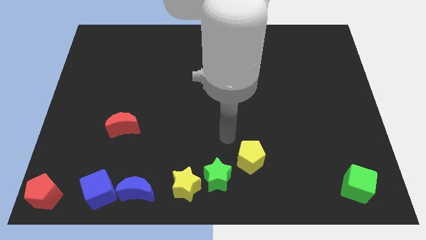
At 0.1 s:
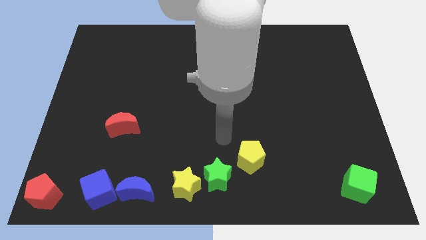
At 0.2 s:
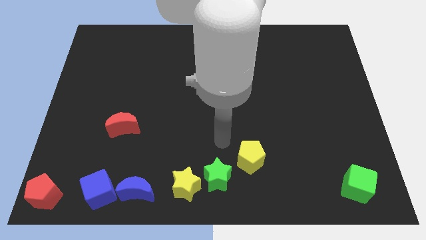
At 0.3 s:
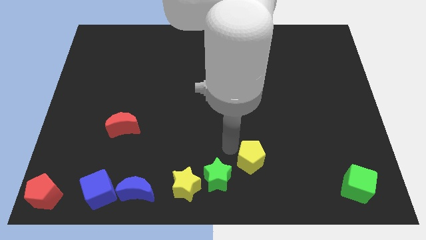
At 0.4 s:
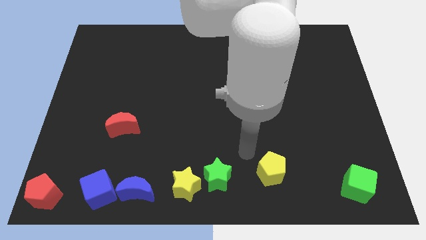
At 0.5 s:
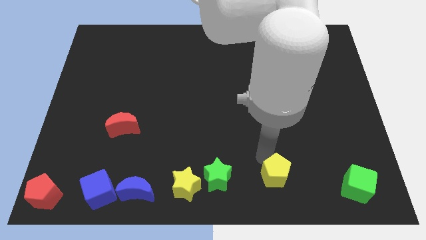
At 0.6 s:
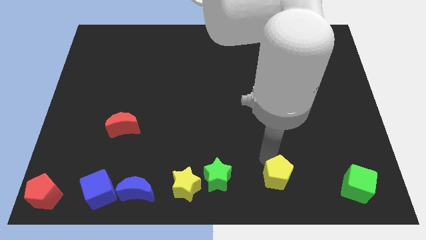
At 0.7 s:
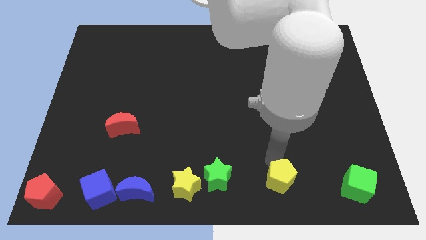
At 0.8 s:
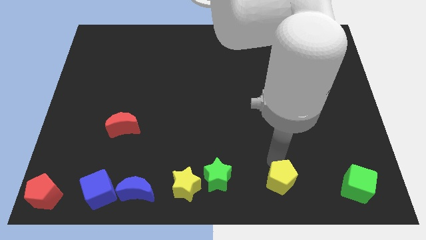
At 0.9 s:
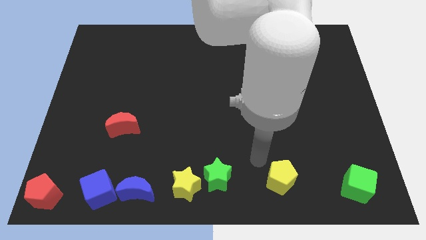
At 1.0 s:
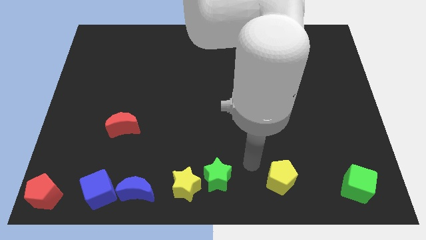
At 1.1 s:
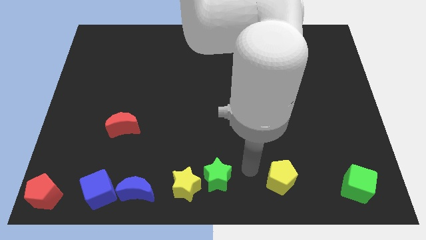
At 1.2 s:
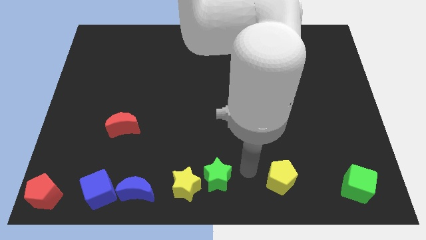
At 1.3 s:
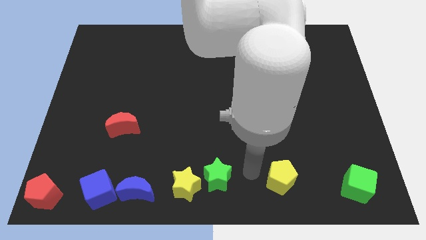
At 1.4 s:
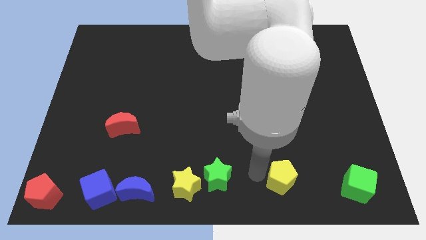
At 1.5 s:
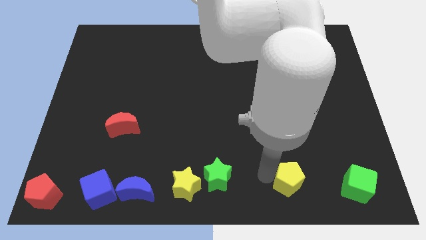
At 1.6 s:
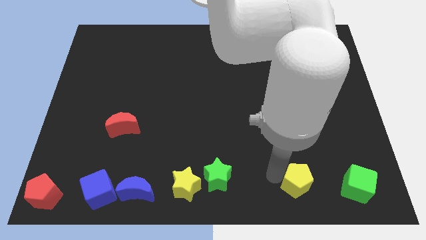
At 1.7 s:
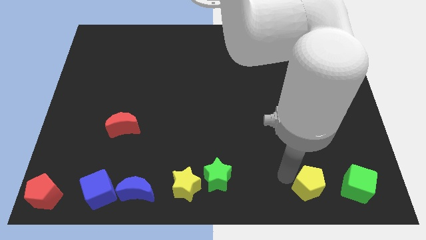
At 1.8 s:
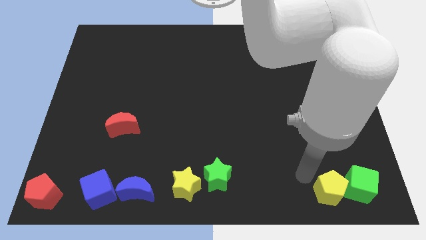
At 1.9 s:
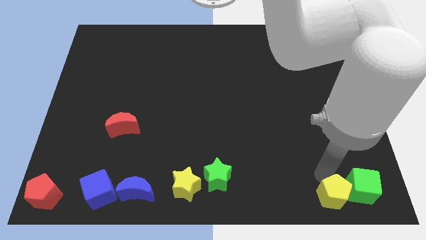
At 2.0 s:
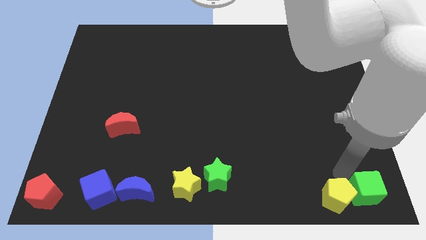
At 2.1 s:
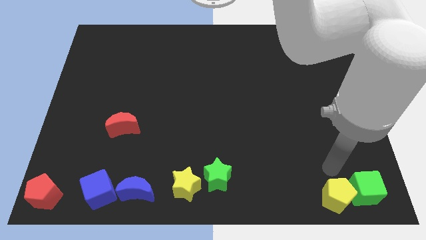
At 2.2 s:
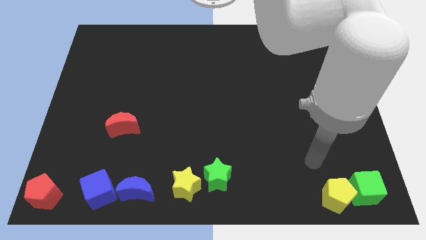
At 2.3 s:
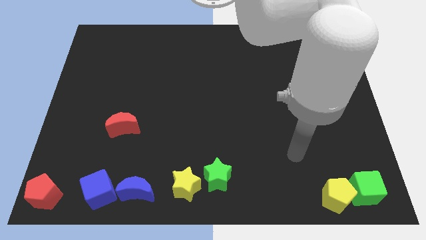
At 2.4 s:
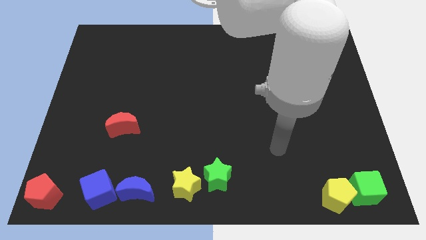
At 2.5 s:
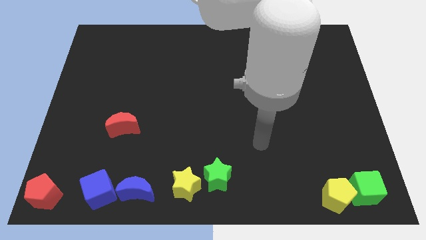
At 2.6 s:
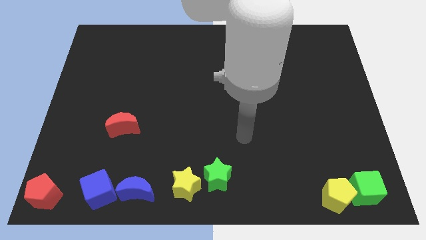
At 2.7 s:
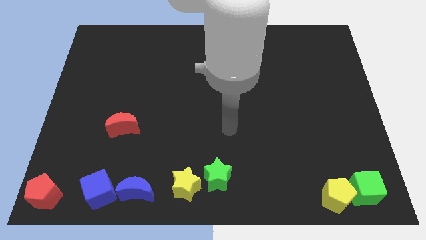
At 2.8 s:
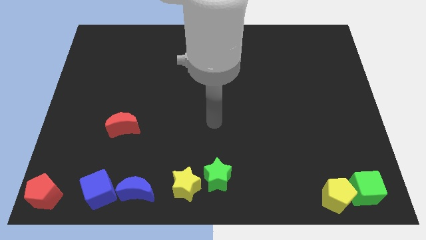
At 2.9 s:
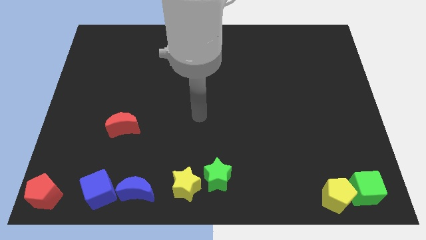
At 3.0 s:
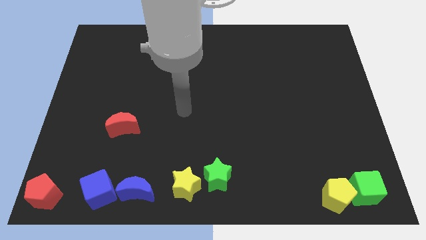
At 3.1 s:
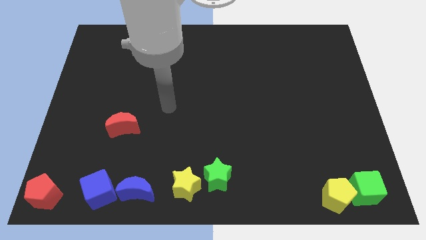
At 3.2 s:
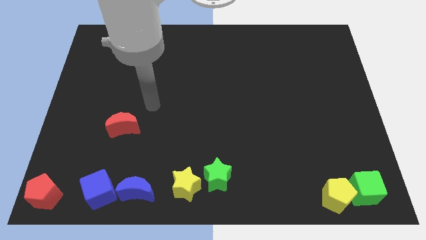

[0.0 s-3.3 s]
push the yellow pentagon into the green cube

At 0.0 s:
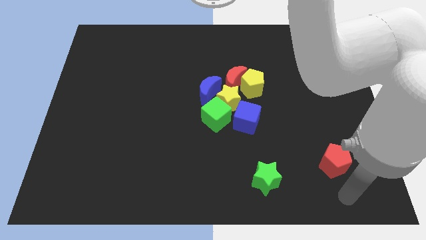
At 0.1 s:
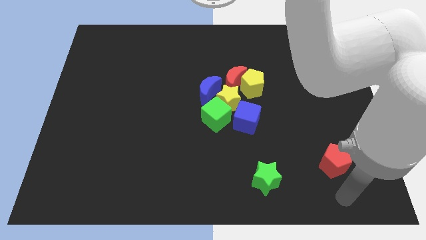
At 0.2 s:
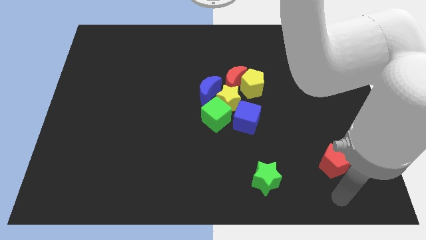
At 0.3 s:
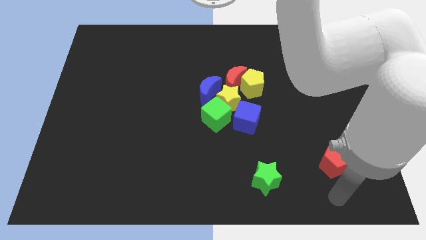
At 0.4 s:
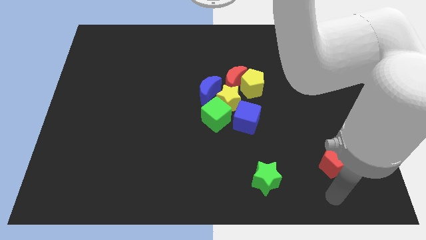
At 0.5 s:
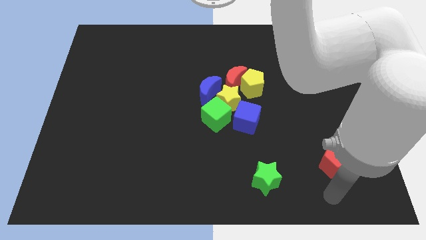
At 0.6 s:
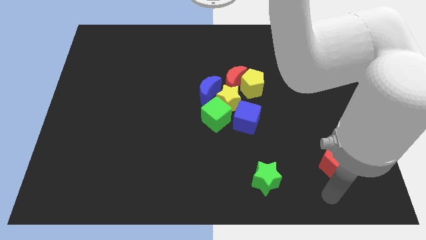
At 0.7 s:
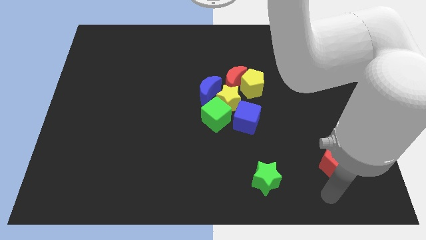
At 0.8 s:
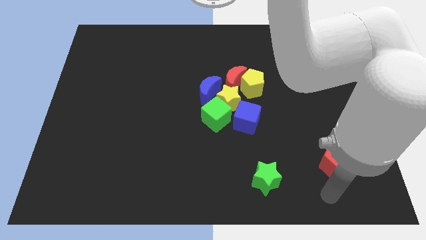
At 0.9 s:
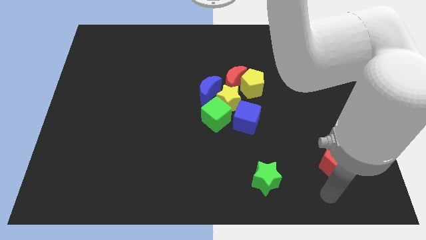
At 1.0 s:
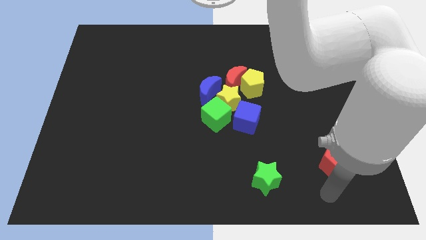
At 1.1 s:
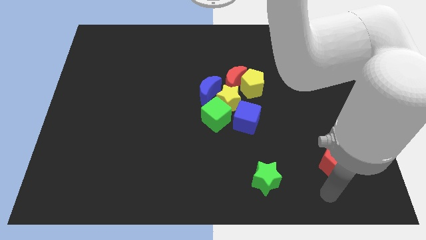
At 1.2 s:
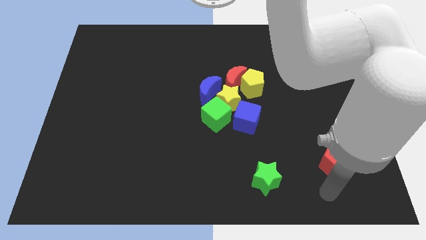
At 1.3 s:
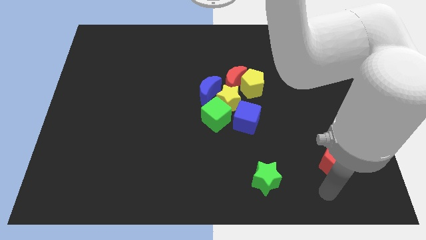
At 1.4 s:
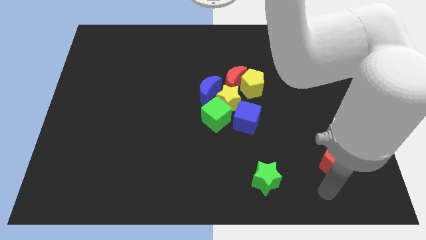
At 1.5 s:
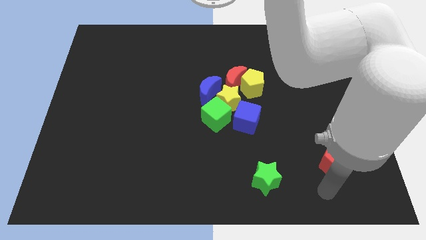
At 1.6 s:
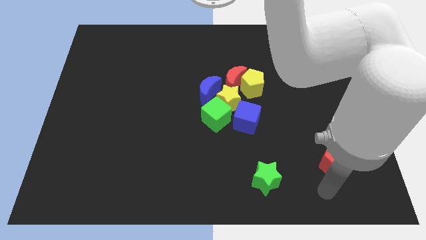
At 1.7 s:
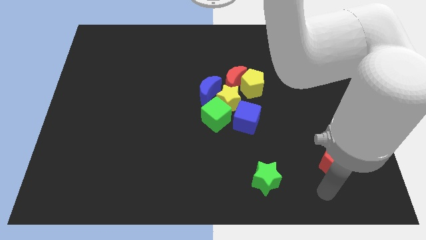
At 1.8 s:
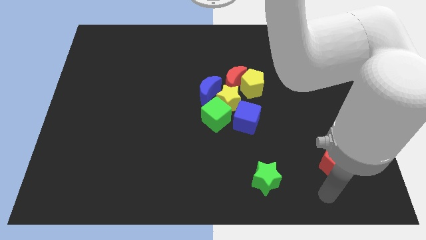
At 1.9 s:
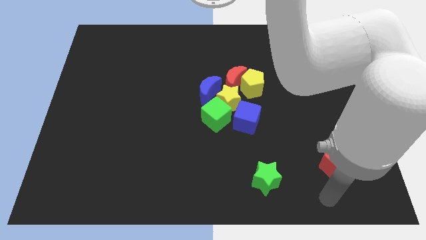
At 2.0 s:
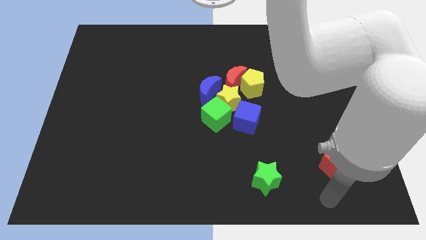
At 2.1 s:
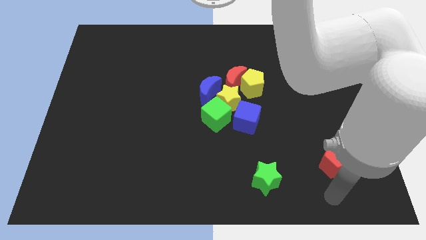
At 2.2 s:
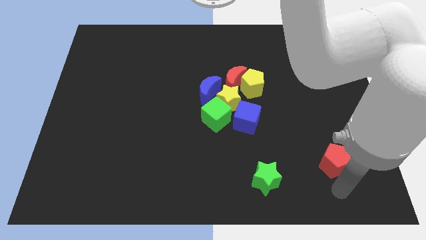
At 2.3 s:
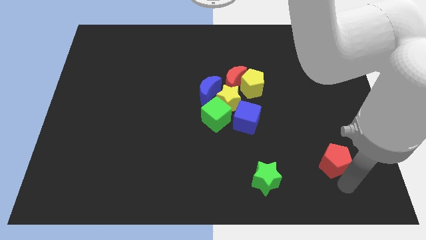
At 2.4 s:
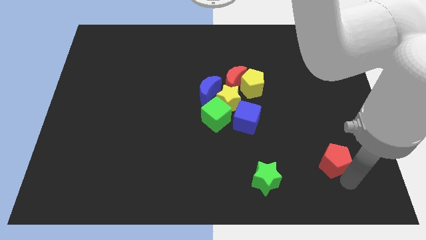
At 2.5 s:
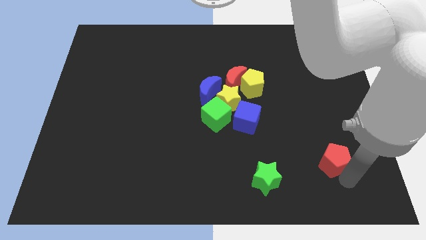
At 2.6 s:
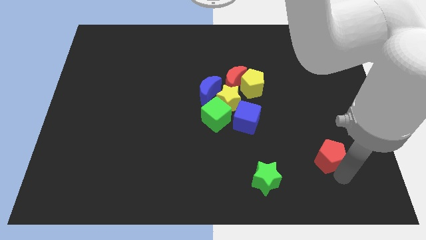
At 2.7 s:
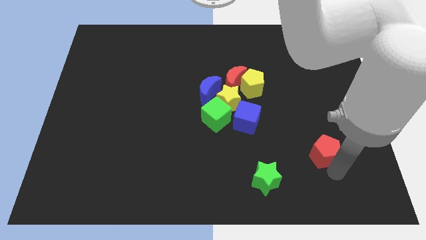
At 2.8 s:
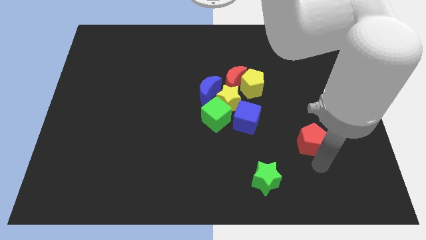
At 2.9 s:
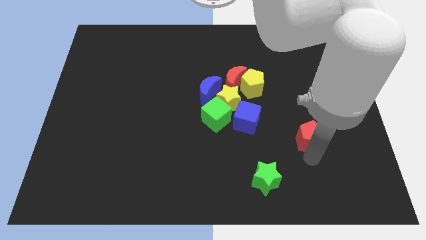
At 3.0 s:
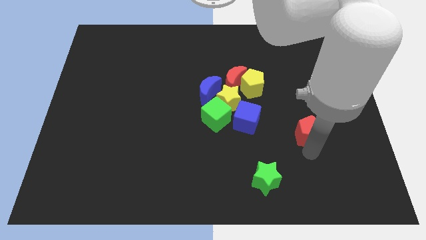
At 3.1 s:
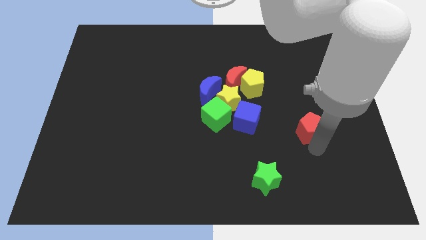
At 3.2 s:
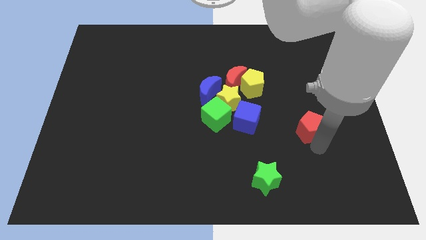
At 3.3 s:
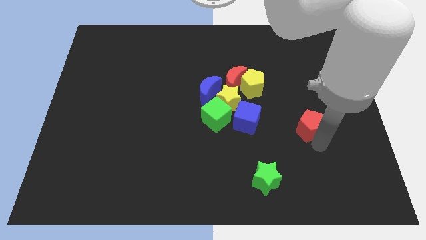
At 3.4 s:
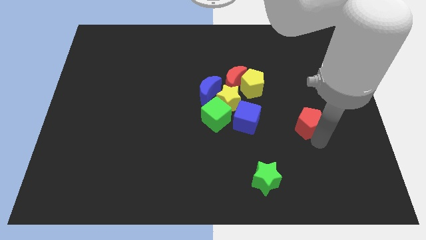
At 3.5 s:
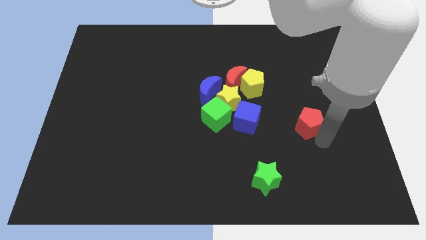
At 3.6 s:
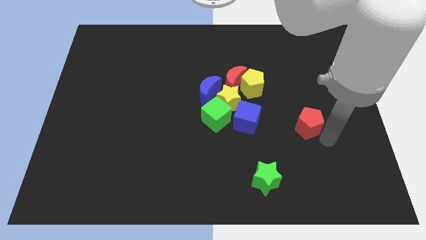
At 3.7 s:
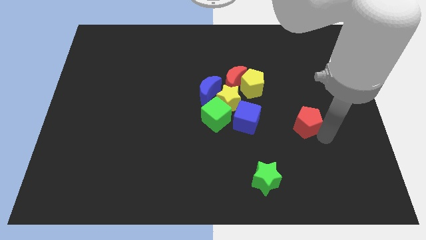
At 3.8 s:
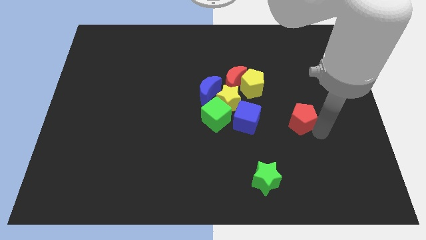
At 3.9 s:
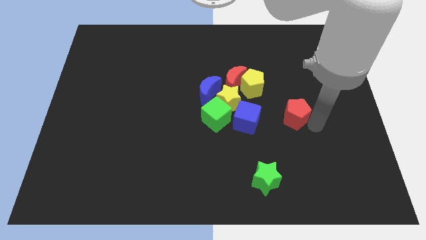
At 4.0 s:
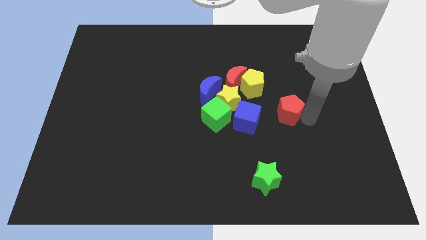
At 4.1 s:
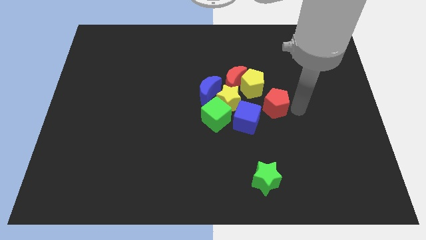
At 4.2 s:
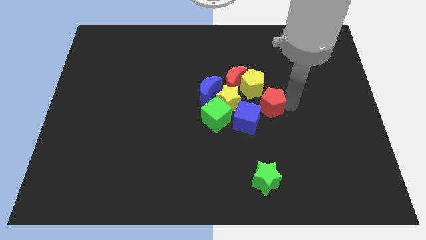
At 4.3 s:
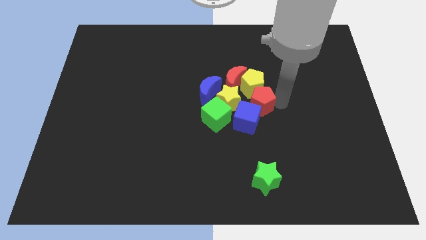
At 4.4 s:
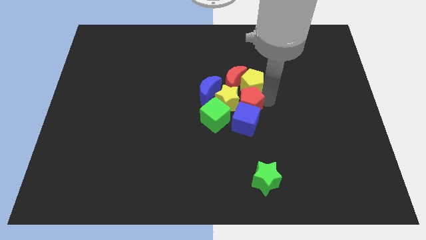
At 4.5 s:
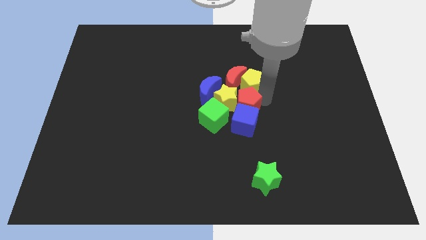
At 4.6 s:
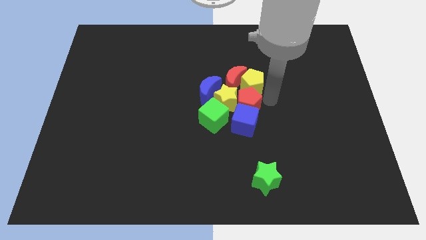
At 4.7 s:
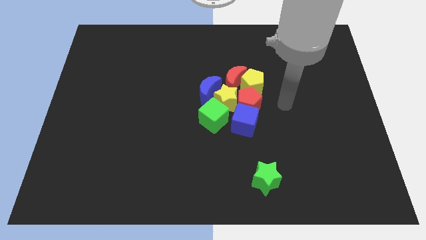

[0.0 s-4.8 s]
move the red pentagon into group of blocks

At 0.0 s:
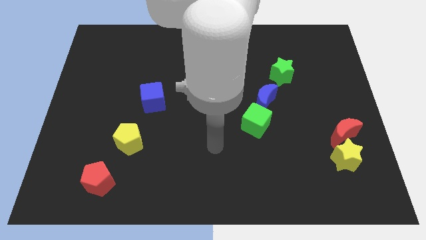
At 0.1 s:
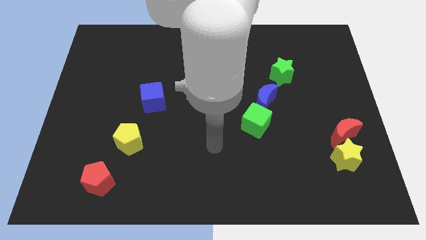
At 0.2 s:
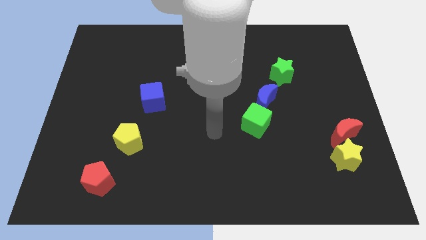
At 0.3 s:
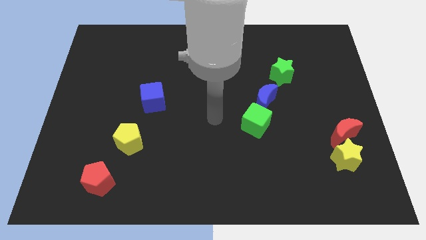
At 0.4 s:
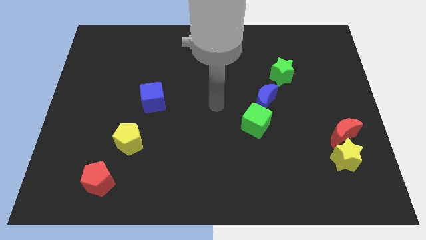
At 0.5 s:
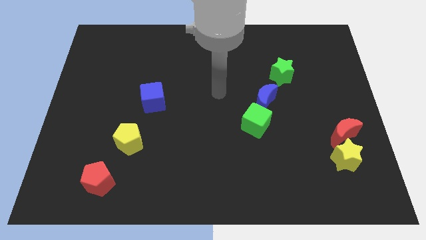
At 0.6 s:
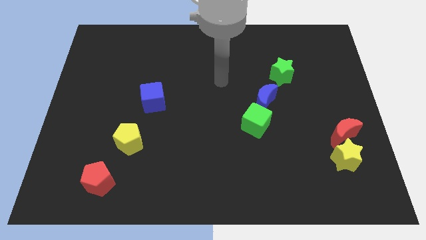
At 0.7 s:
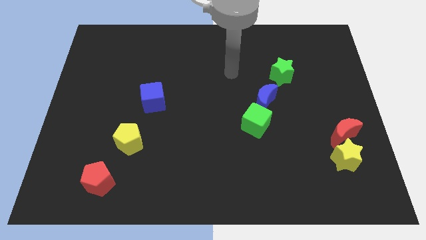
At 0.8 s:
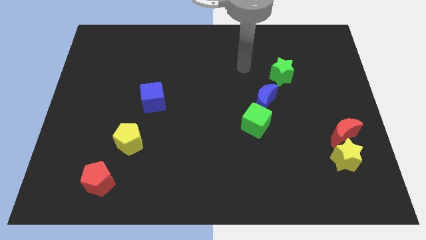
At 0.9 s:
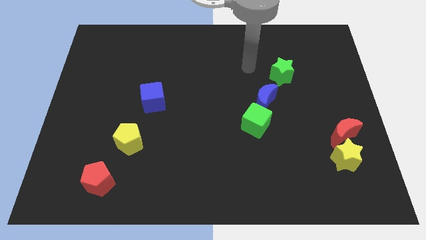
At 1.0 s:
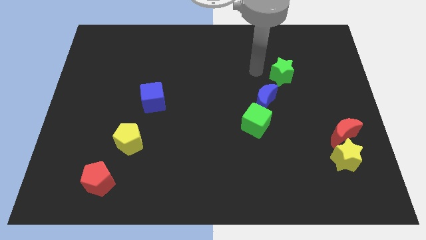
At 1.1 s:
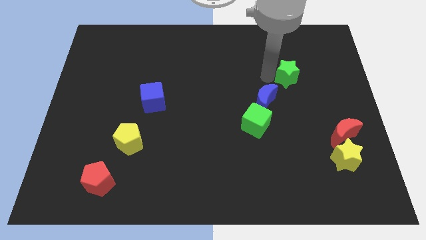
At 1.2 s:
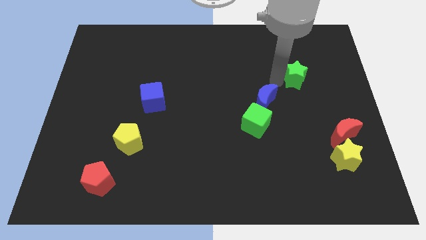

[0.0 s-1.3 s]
touch the left side of the green star
